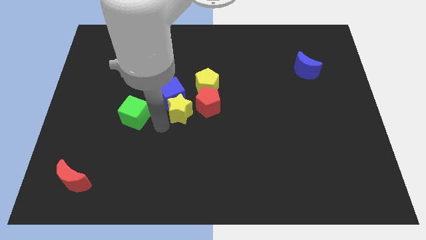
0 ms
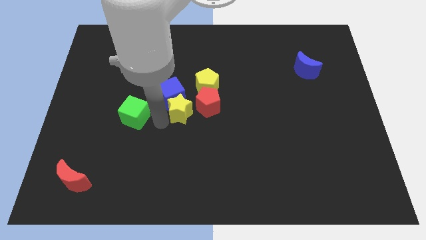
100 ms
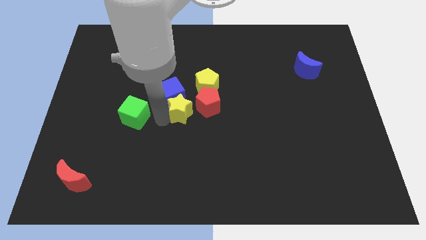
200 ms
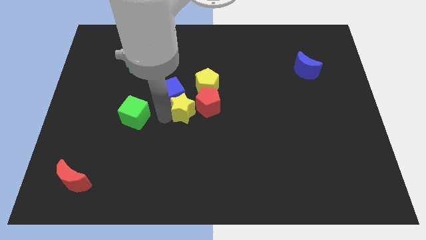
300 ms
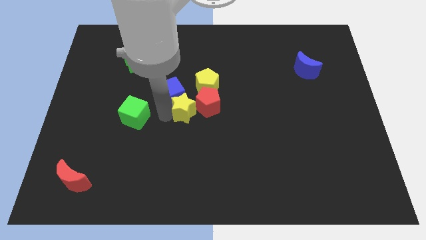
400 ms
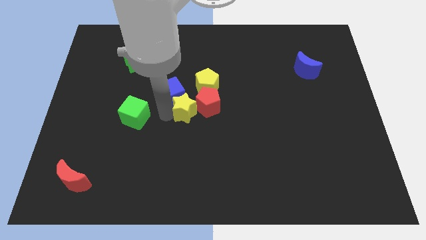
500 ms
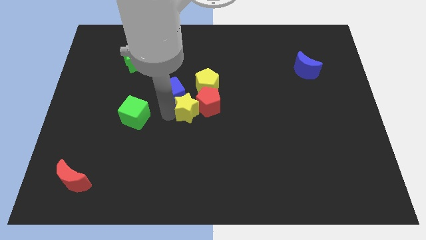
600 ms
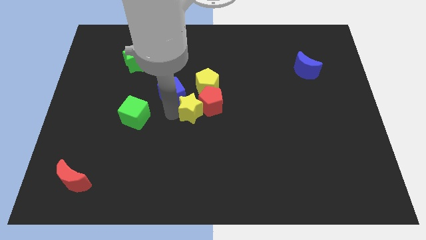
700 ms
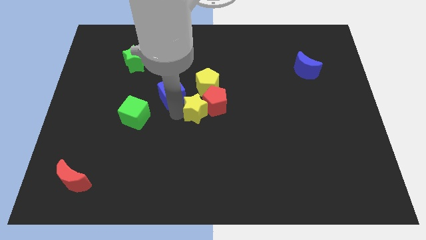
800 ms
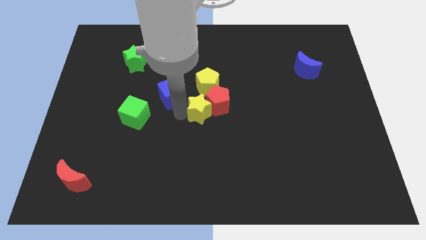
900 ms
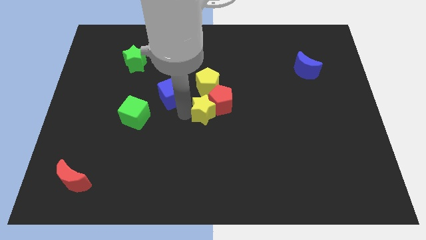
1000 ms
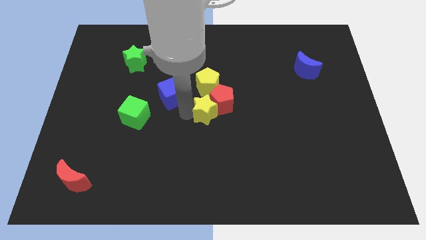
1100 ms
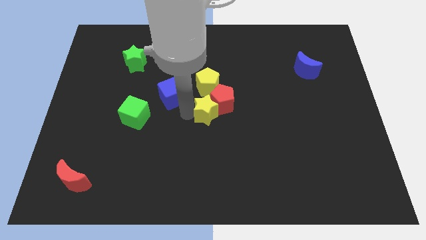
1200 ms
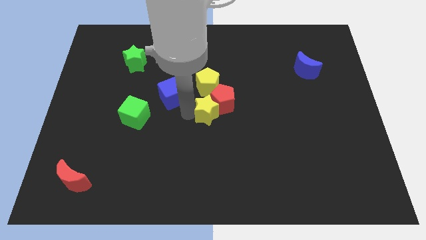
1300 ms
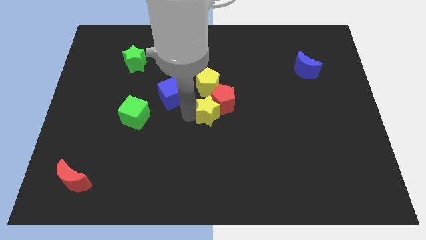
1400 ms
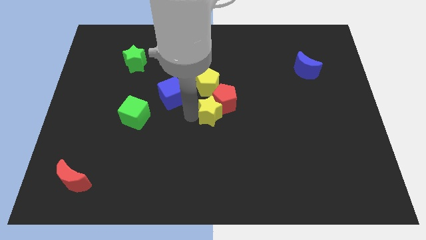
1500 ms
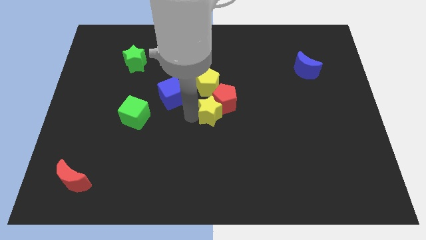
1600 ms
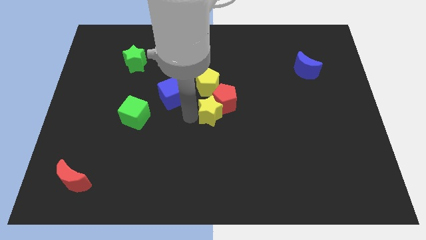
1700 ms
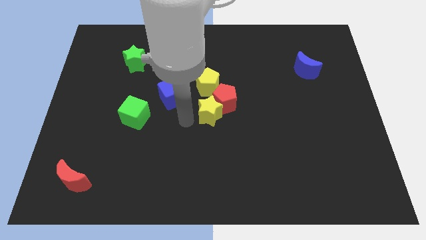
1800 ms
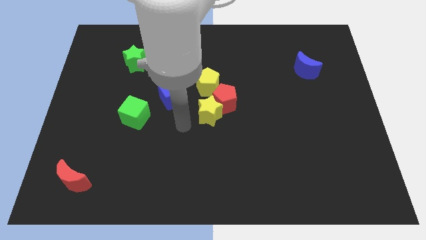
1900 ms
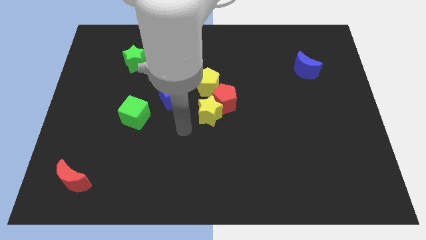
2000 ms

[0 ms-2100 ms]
push the yellow star into the red pentagon

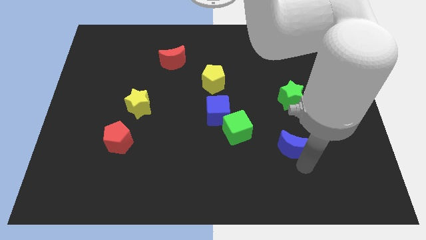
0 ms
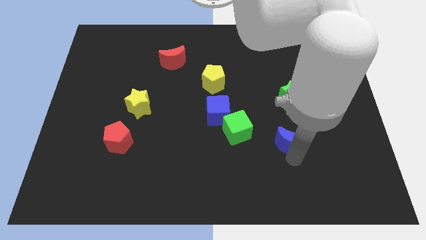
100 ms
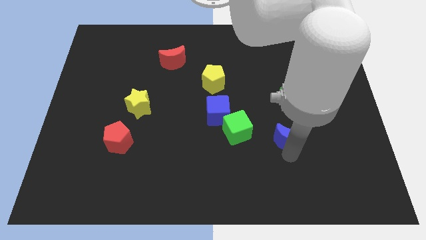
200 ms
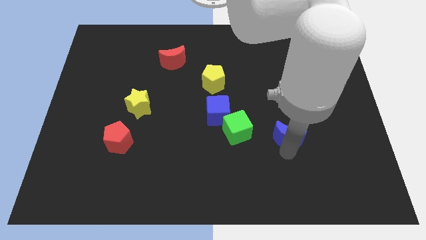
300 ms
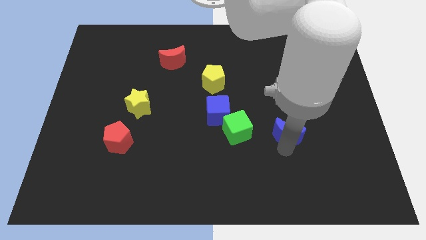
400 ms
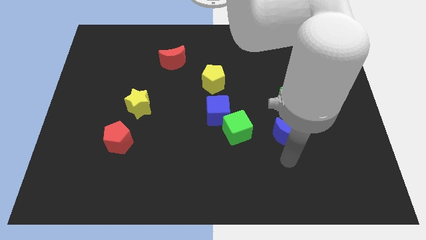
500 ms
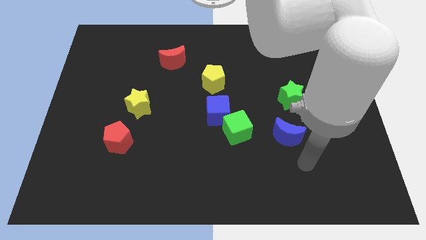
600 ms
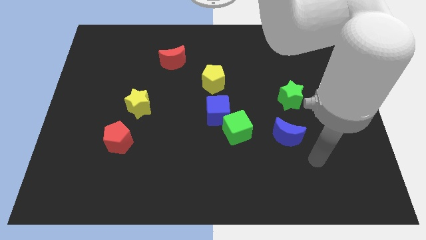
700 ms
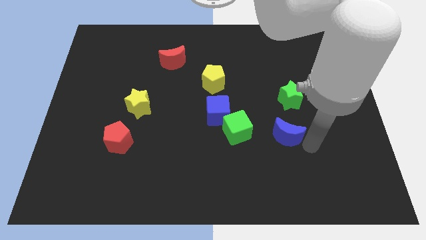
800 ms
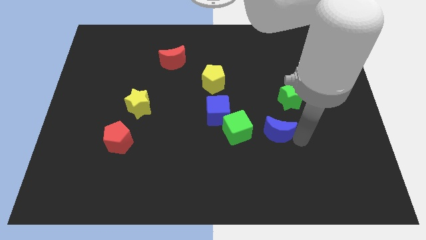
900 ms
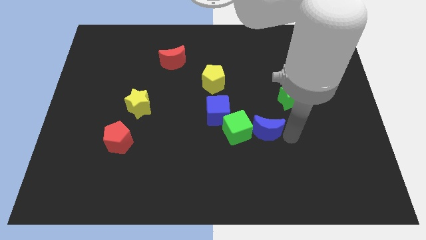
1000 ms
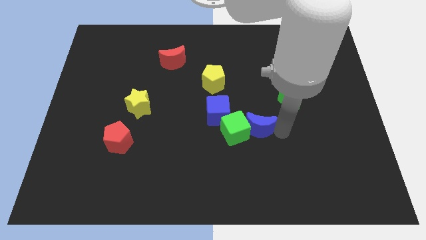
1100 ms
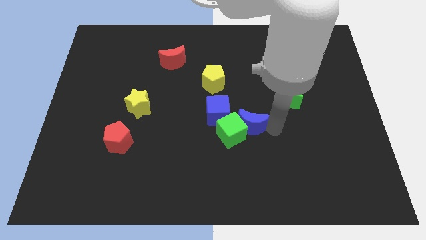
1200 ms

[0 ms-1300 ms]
push blue moon to the left of green cube

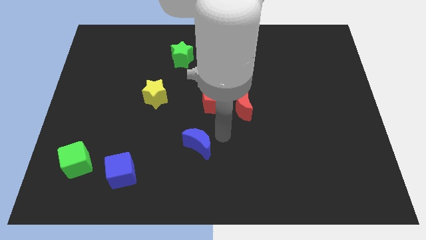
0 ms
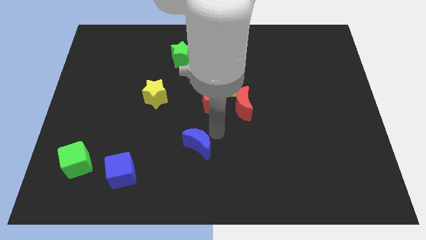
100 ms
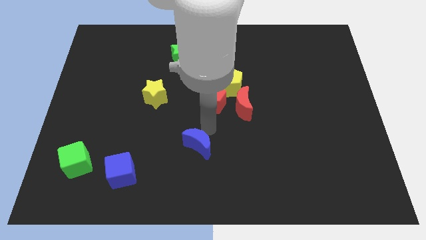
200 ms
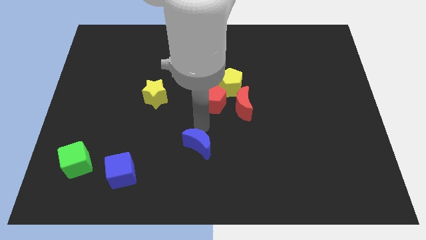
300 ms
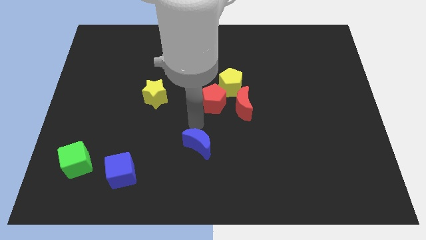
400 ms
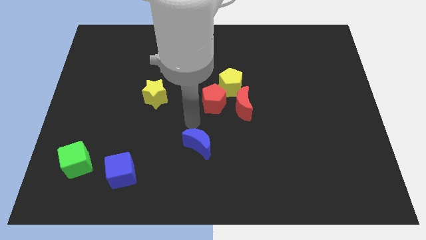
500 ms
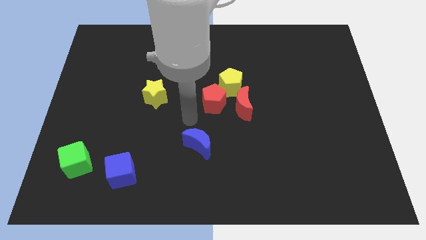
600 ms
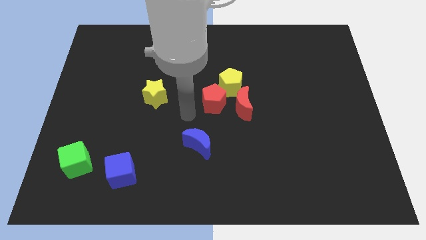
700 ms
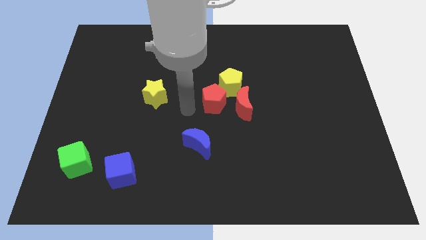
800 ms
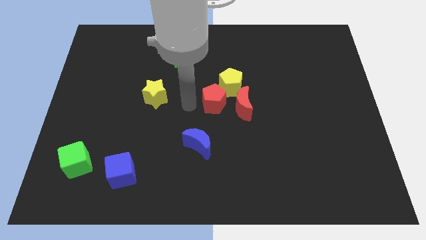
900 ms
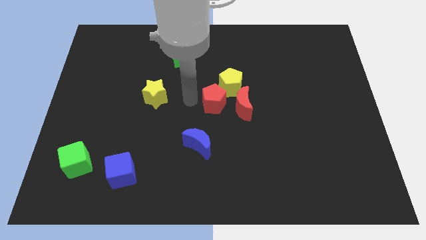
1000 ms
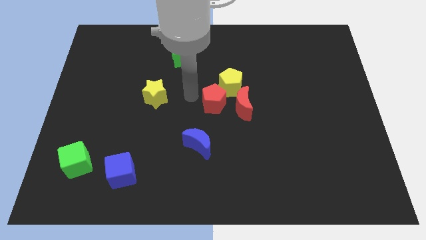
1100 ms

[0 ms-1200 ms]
place your arm at the left of the red pentagon

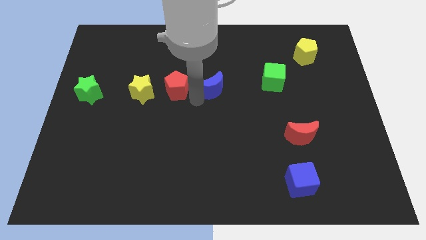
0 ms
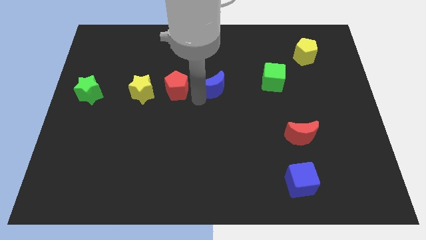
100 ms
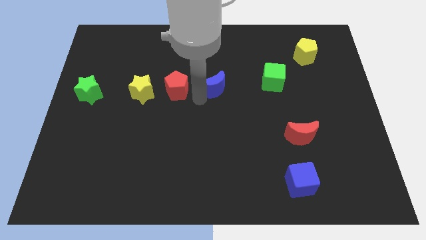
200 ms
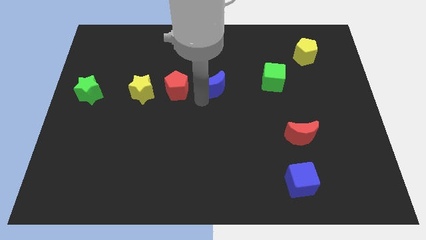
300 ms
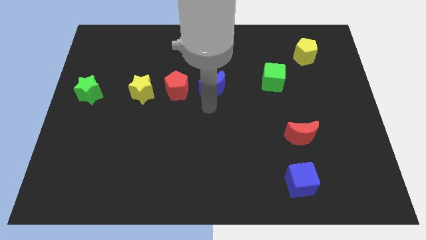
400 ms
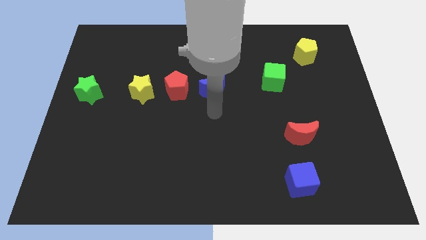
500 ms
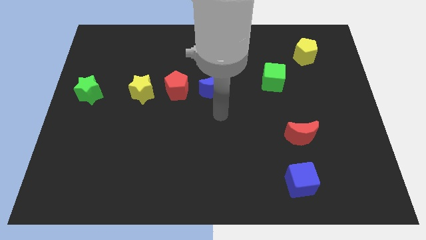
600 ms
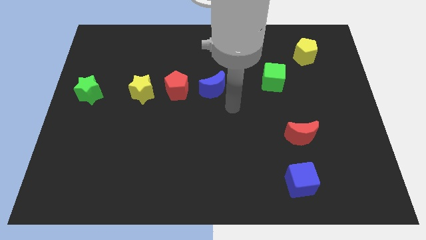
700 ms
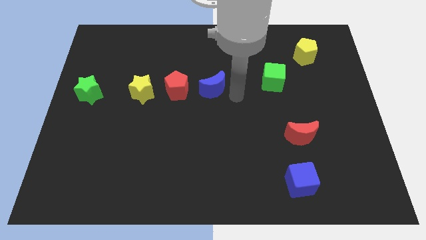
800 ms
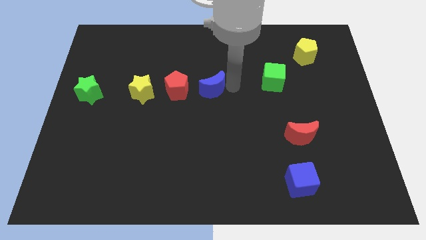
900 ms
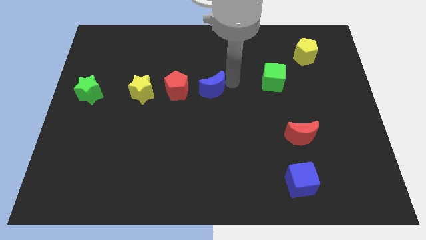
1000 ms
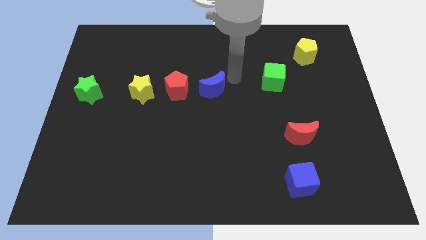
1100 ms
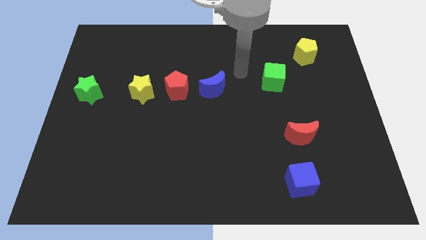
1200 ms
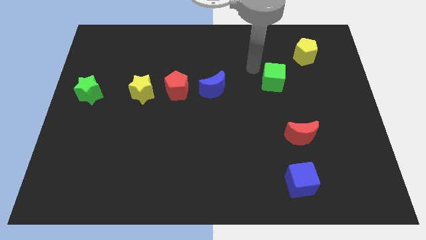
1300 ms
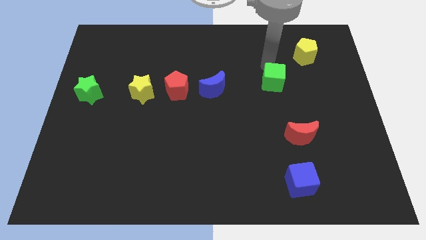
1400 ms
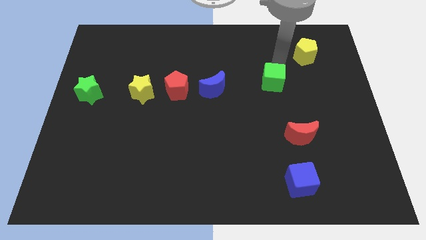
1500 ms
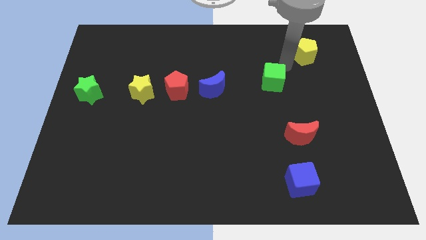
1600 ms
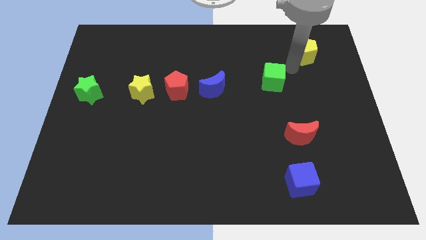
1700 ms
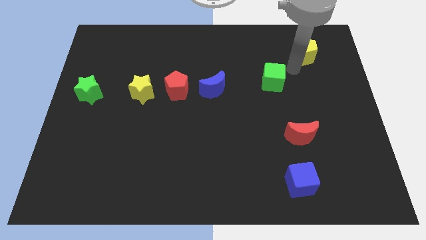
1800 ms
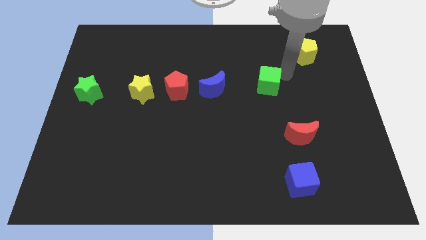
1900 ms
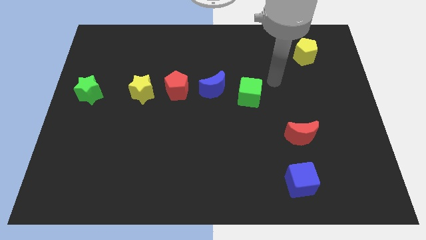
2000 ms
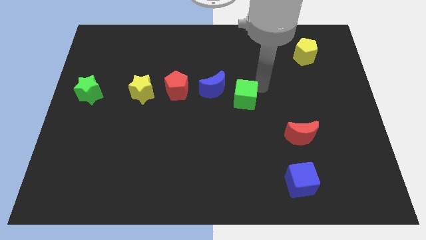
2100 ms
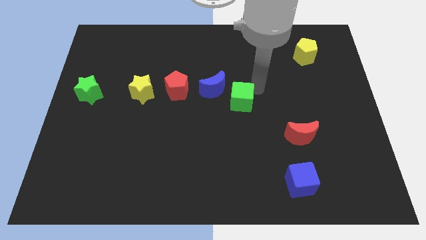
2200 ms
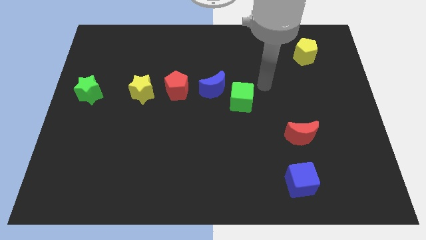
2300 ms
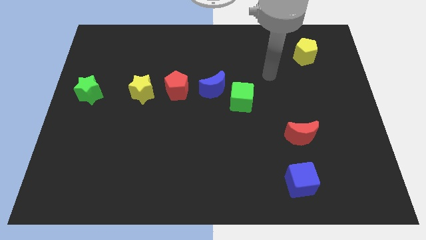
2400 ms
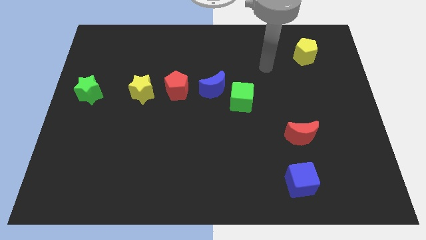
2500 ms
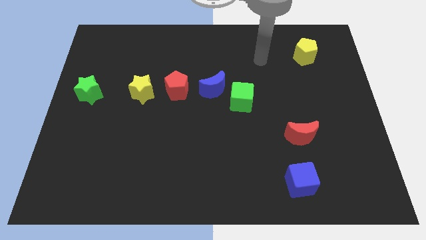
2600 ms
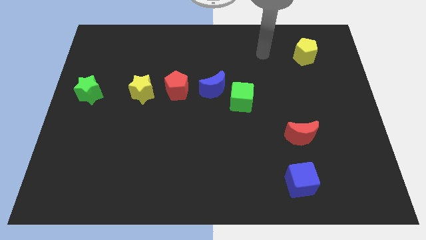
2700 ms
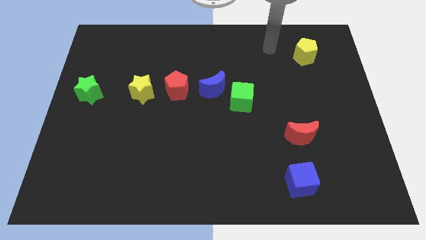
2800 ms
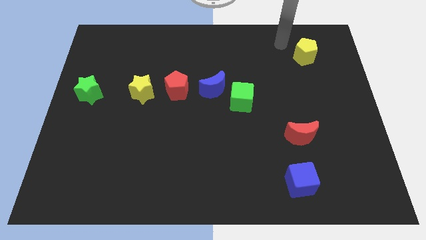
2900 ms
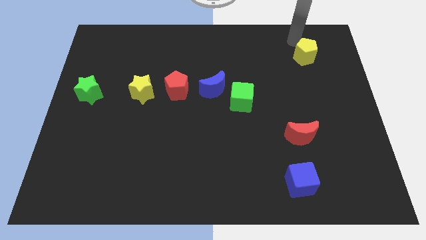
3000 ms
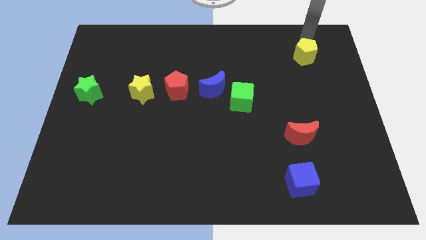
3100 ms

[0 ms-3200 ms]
move the green cube to the bottom right of the blue crescent

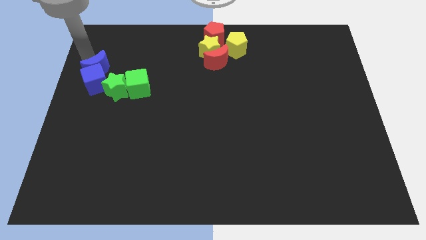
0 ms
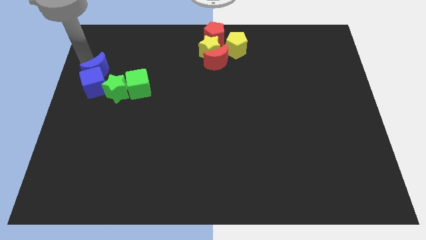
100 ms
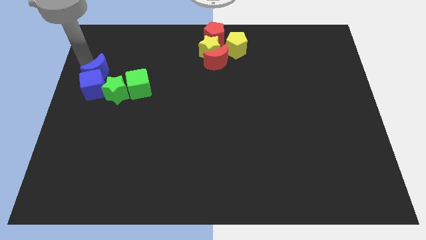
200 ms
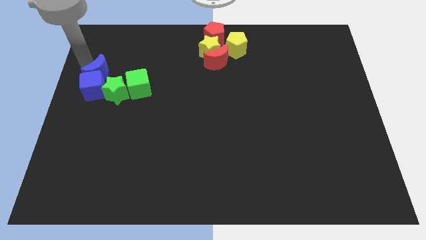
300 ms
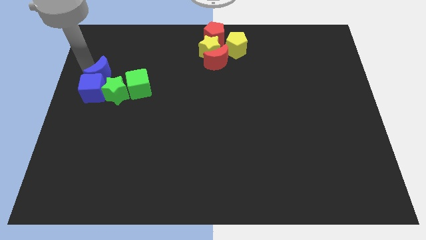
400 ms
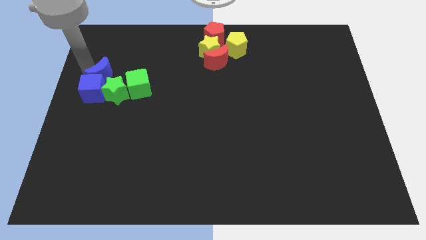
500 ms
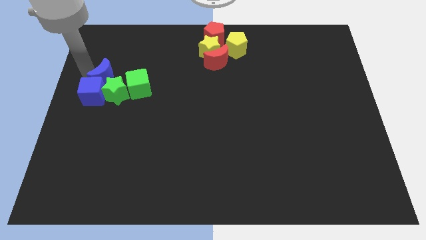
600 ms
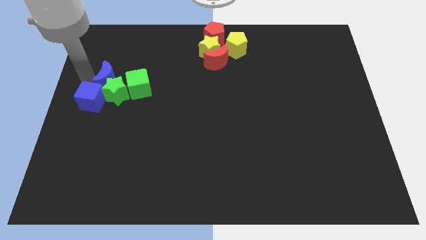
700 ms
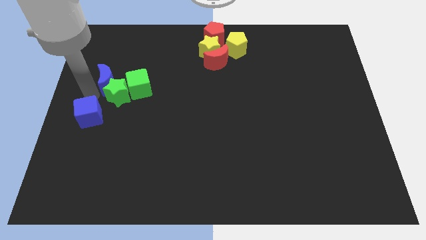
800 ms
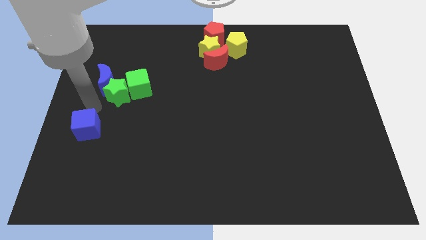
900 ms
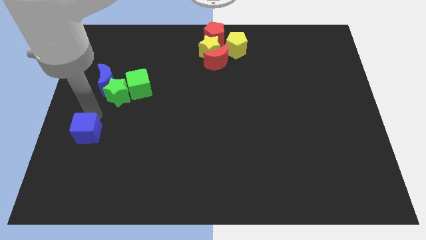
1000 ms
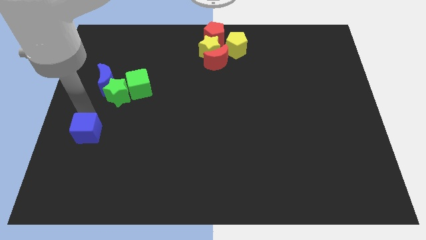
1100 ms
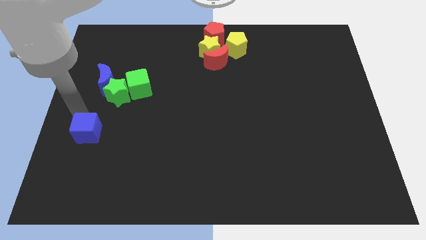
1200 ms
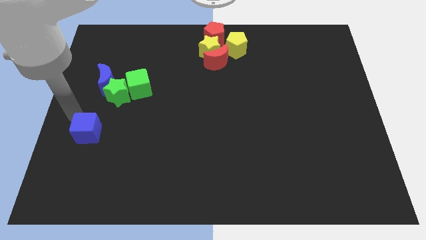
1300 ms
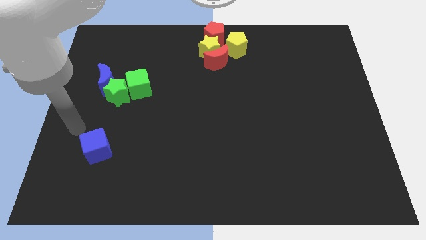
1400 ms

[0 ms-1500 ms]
push the blue cube away from the blue crescent
